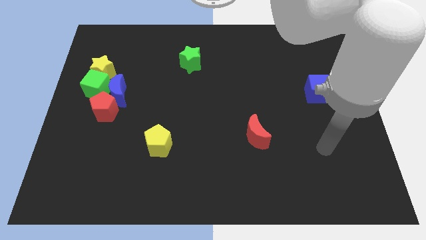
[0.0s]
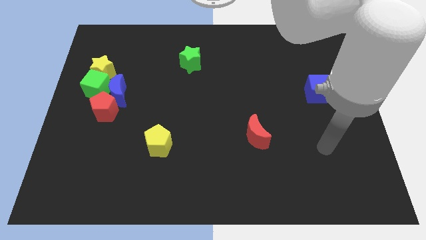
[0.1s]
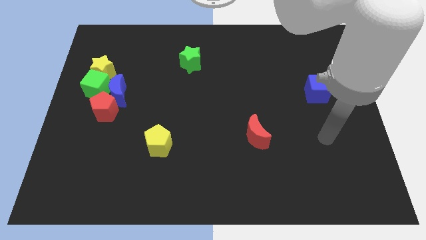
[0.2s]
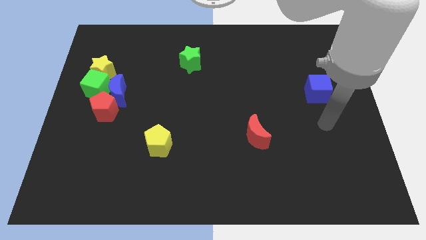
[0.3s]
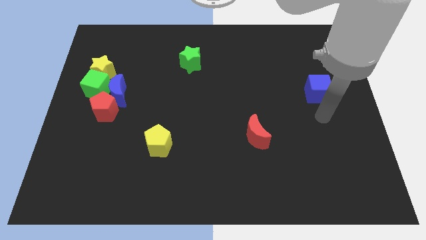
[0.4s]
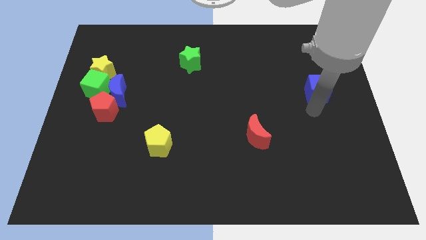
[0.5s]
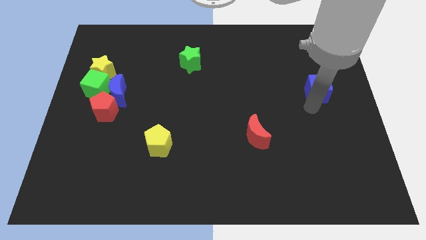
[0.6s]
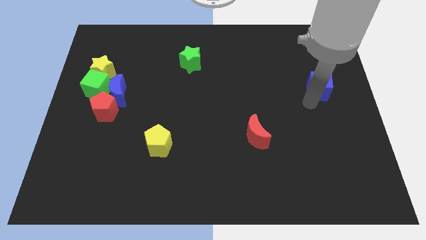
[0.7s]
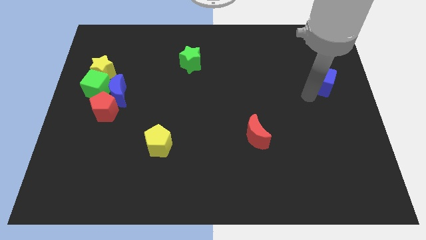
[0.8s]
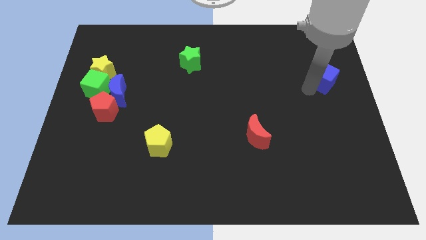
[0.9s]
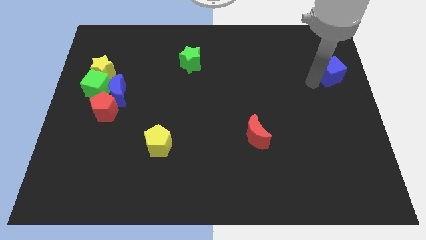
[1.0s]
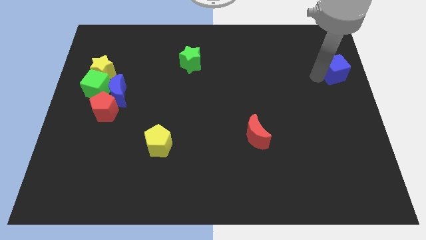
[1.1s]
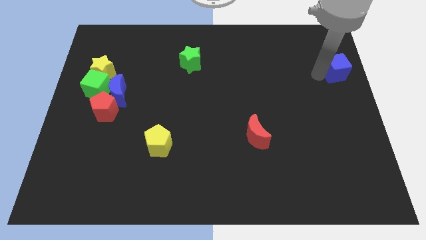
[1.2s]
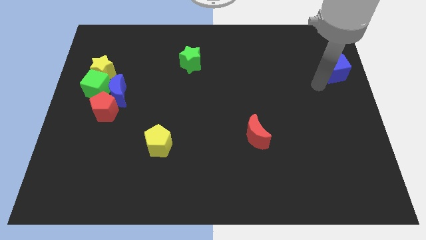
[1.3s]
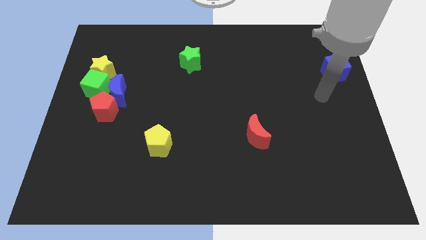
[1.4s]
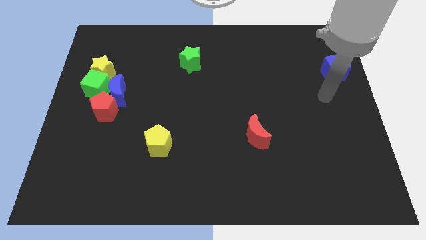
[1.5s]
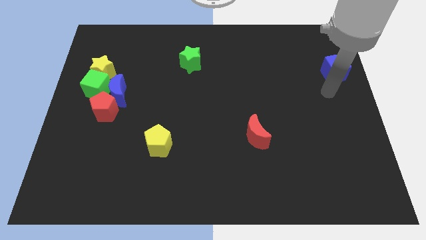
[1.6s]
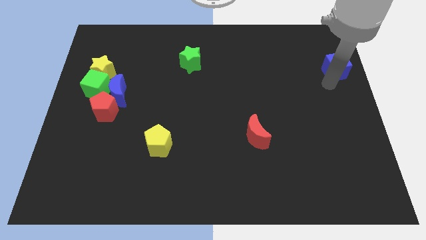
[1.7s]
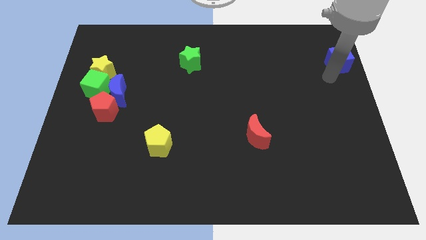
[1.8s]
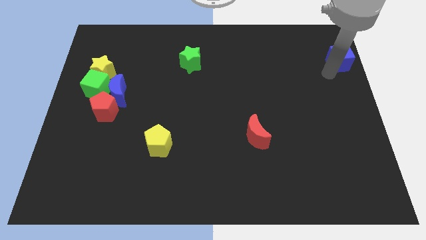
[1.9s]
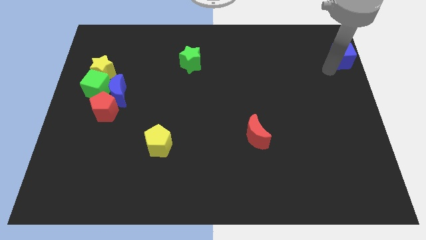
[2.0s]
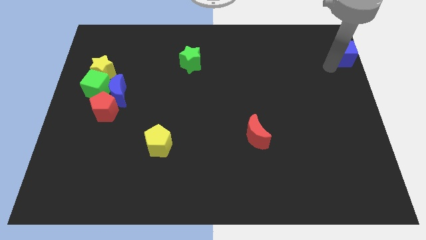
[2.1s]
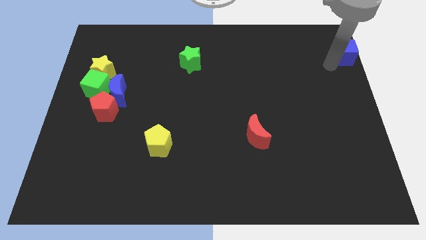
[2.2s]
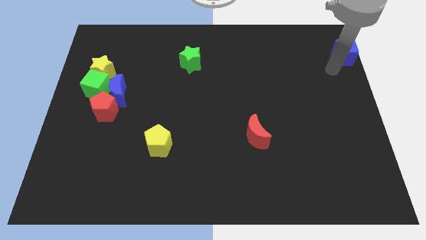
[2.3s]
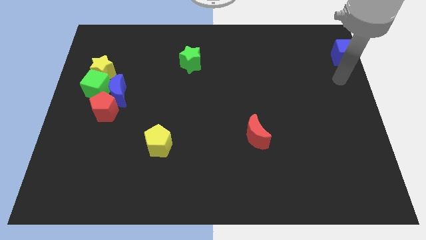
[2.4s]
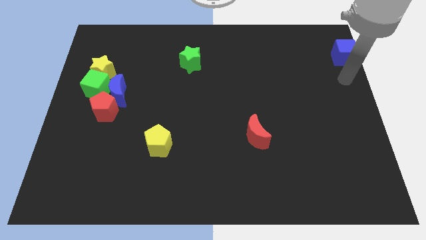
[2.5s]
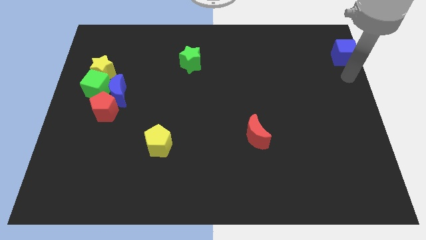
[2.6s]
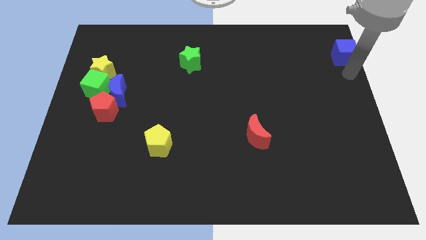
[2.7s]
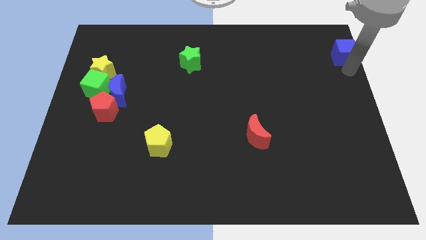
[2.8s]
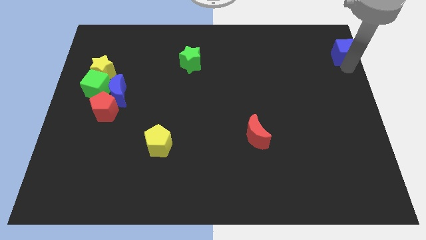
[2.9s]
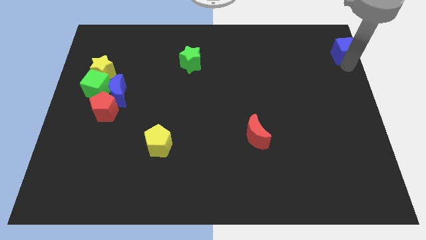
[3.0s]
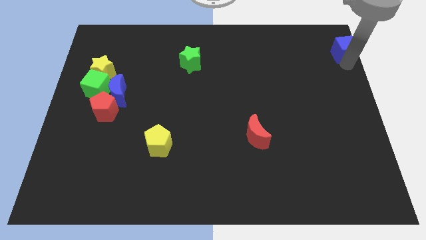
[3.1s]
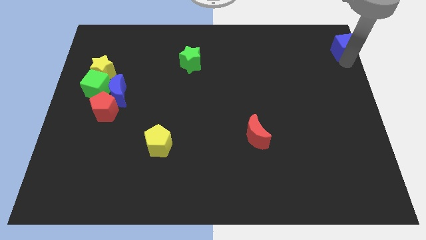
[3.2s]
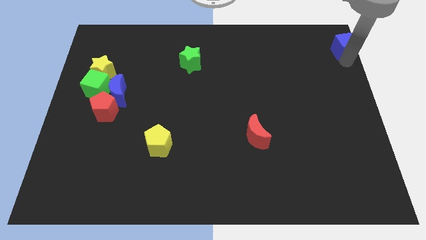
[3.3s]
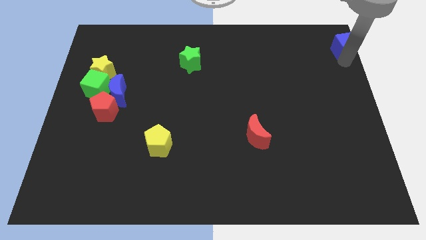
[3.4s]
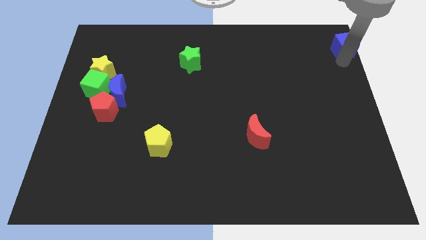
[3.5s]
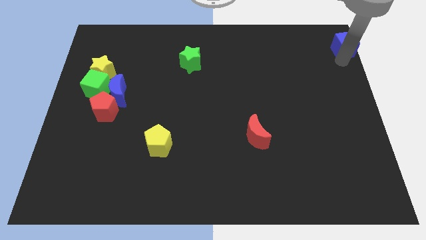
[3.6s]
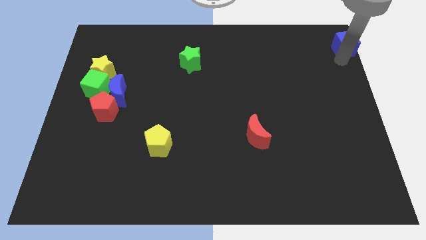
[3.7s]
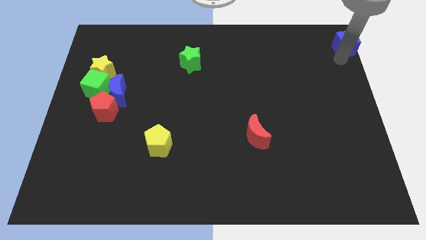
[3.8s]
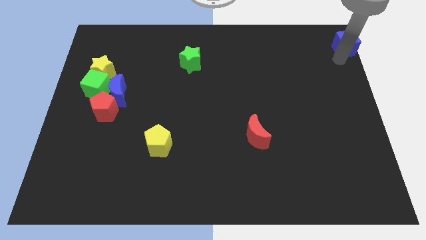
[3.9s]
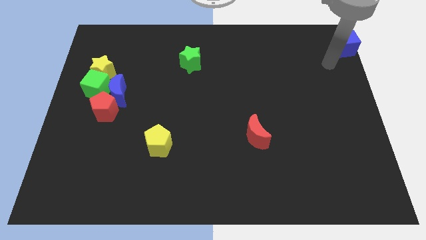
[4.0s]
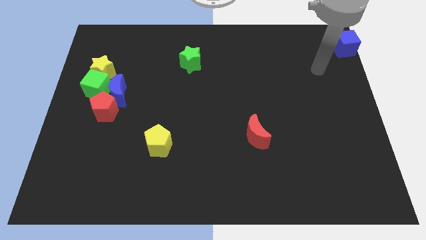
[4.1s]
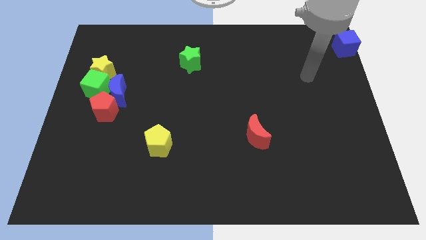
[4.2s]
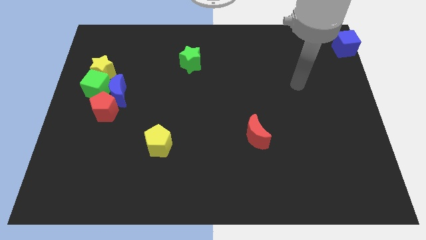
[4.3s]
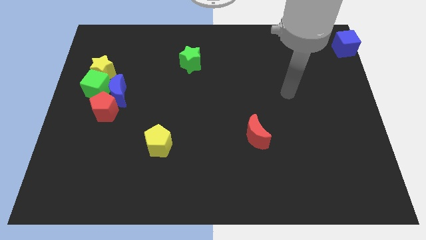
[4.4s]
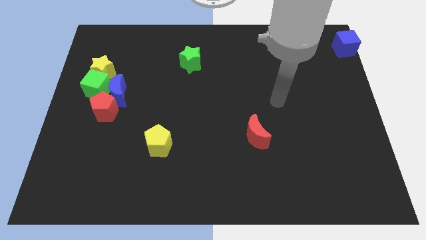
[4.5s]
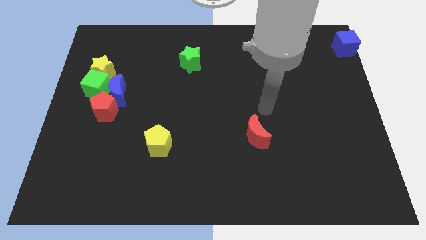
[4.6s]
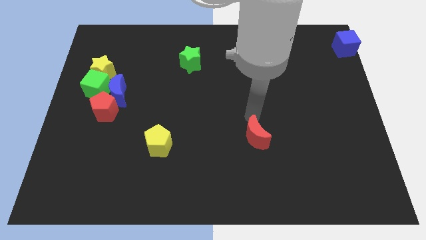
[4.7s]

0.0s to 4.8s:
move the blue cube towards the top right of the board

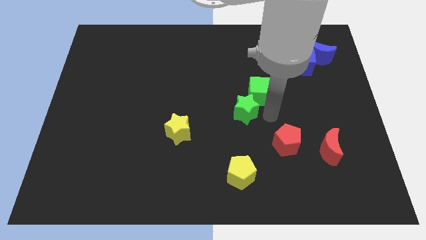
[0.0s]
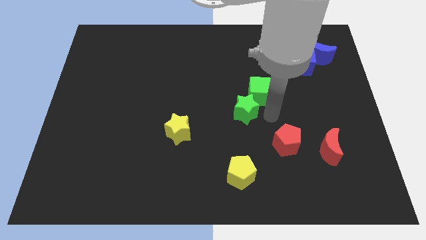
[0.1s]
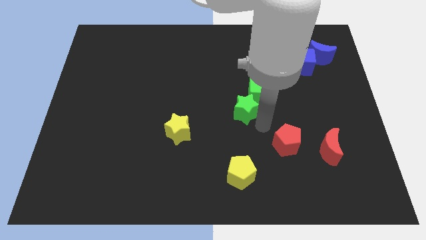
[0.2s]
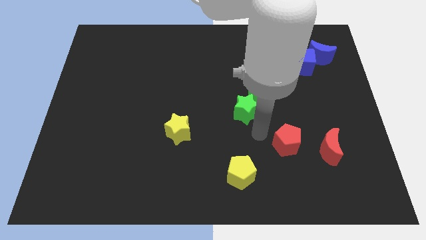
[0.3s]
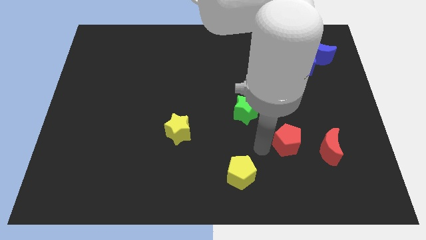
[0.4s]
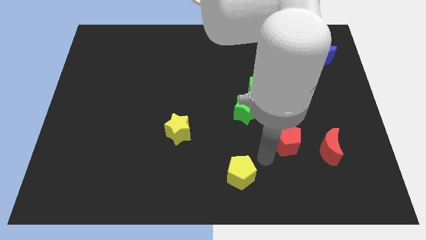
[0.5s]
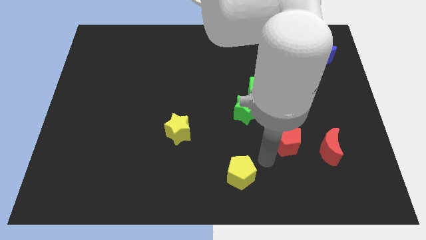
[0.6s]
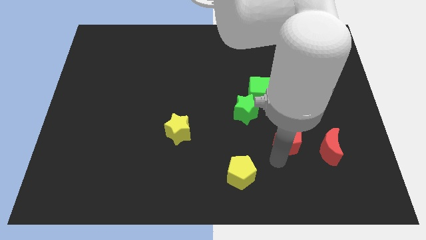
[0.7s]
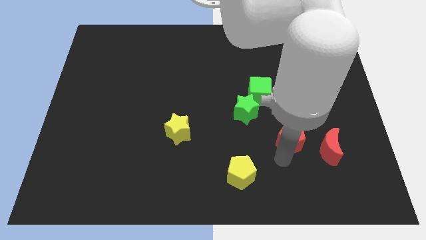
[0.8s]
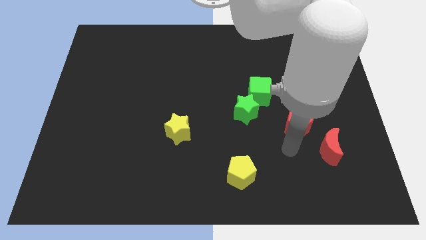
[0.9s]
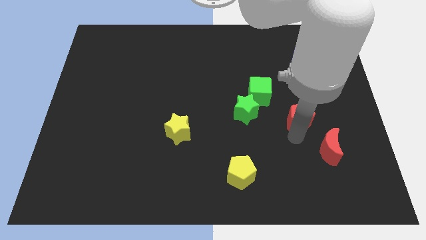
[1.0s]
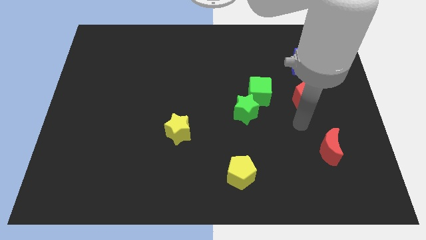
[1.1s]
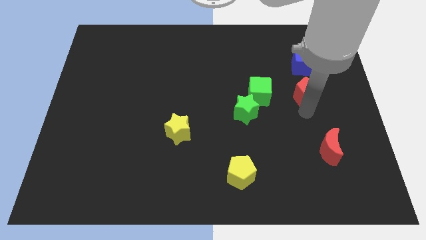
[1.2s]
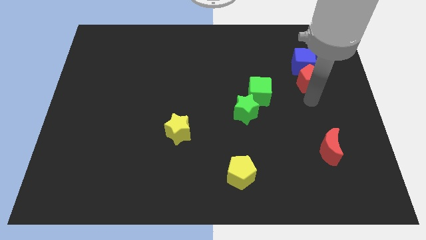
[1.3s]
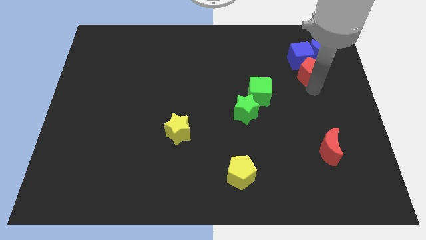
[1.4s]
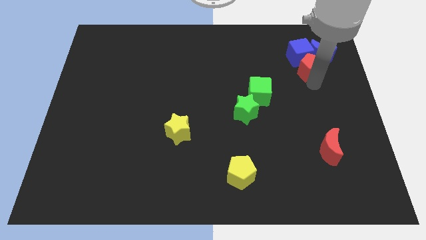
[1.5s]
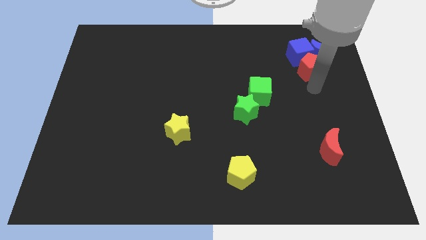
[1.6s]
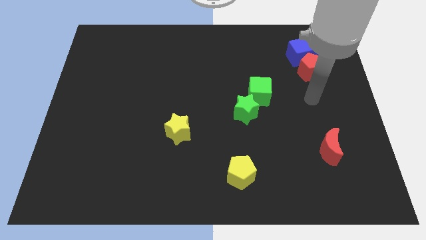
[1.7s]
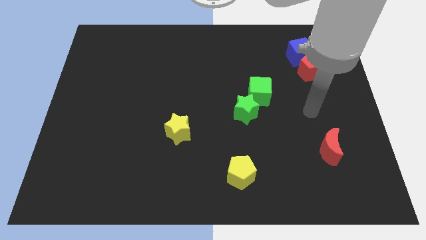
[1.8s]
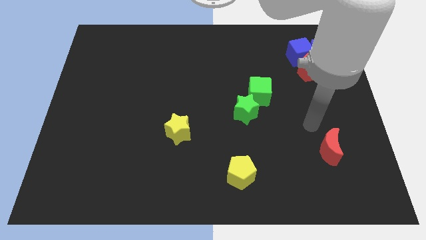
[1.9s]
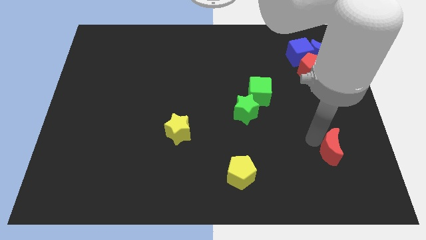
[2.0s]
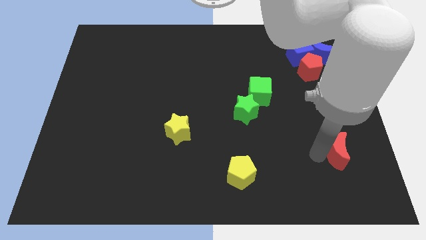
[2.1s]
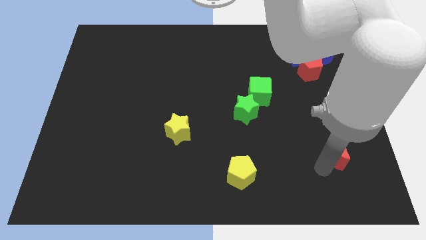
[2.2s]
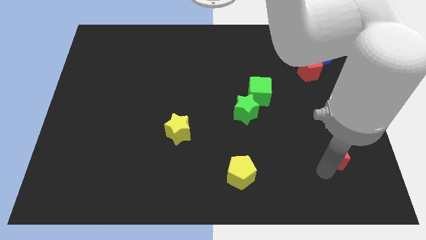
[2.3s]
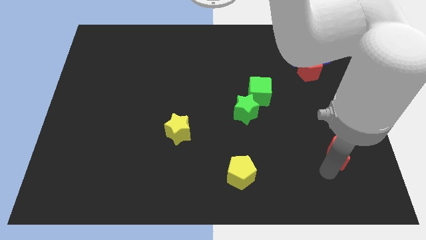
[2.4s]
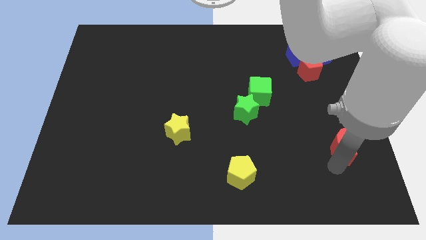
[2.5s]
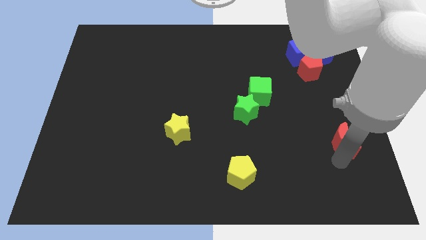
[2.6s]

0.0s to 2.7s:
push the red pentagon into the bottom side of the blue cube

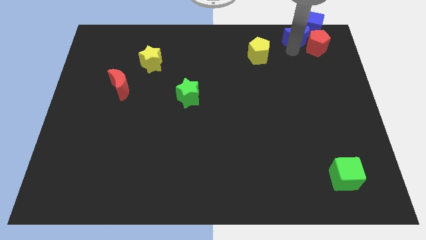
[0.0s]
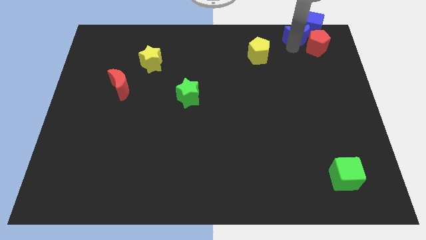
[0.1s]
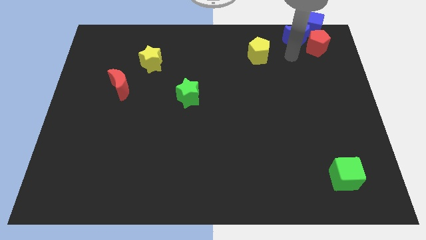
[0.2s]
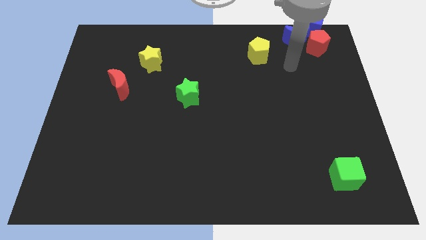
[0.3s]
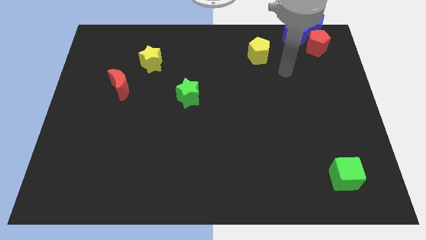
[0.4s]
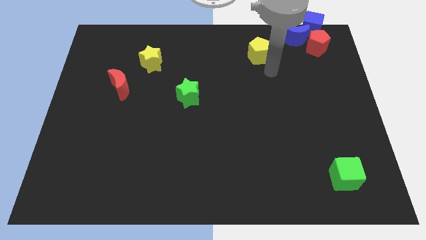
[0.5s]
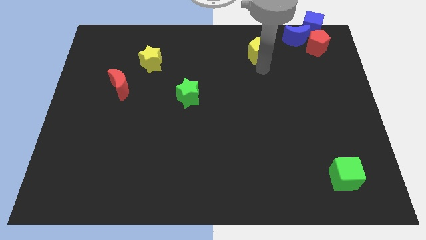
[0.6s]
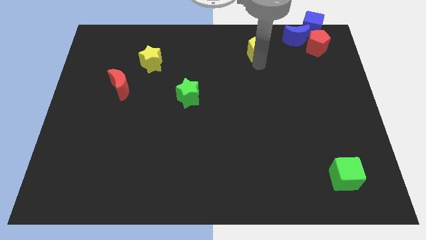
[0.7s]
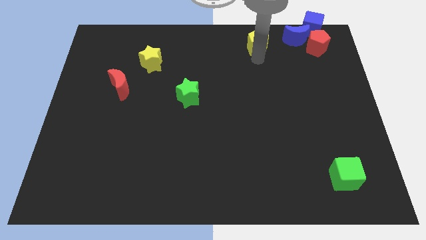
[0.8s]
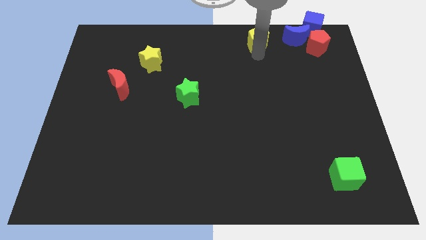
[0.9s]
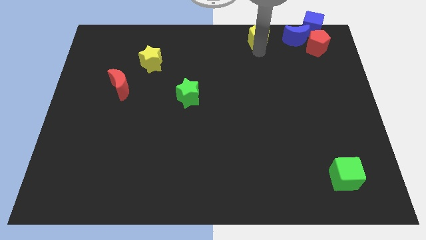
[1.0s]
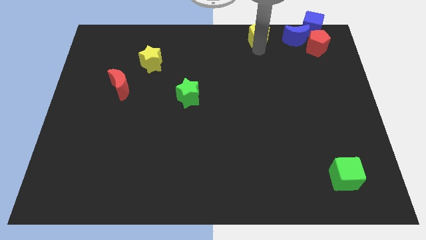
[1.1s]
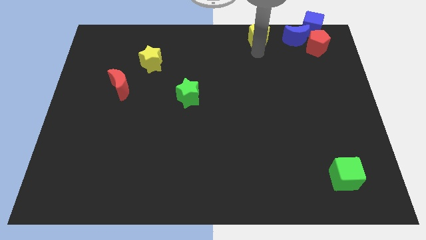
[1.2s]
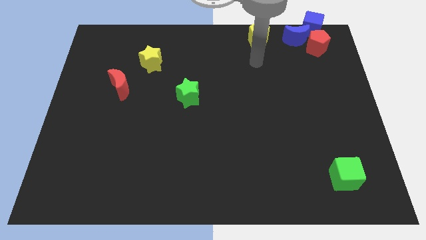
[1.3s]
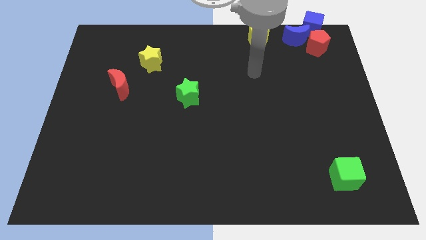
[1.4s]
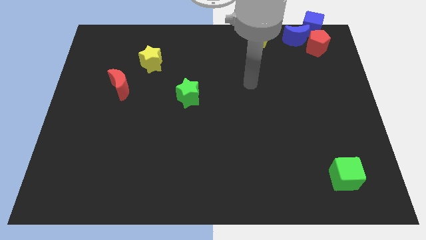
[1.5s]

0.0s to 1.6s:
drag the yellow pentagon to the left of the blue moon
